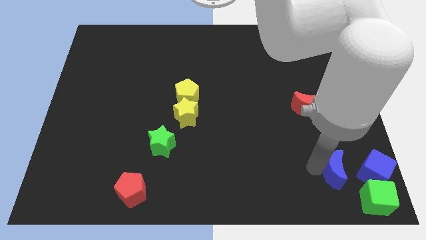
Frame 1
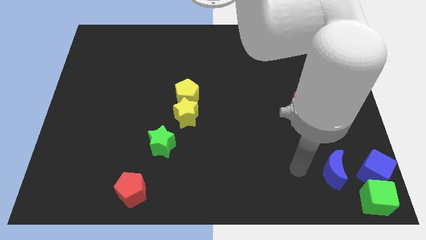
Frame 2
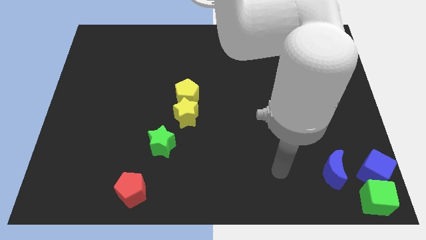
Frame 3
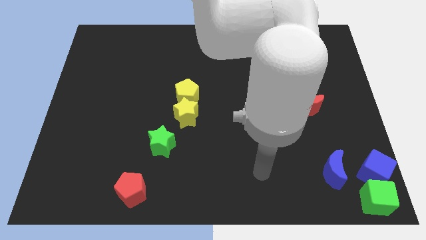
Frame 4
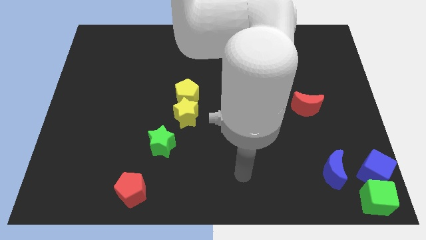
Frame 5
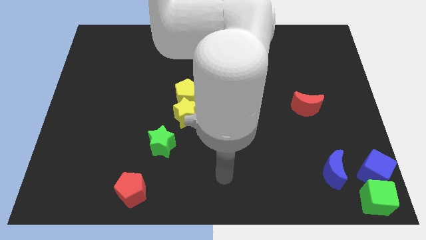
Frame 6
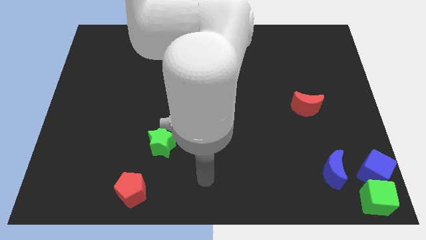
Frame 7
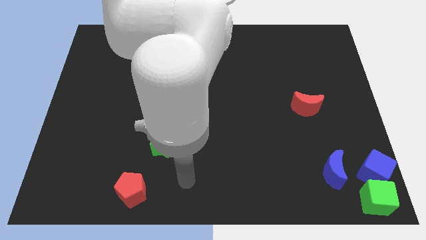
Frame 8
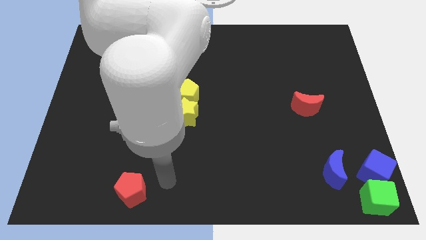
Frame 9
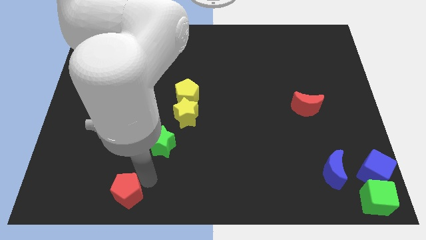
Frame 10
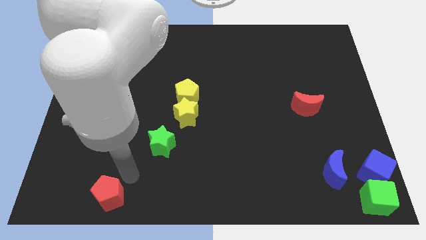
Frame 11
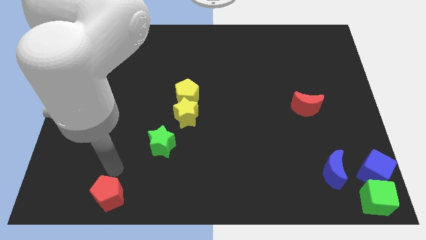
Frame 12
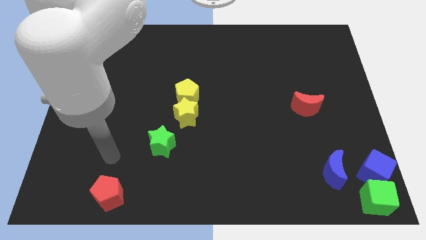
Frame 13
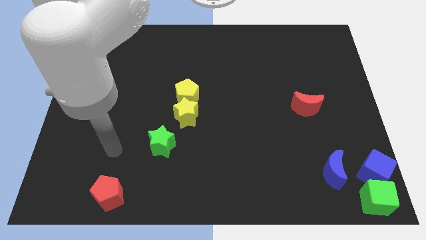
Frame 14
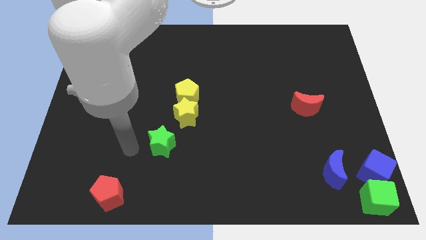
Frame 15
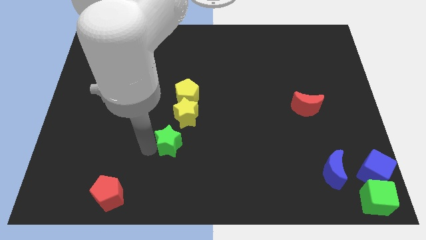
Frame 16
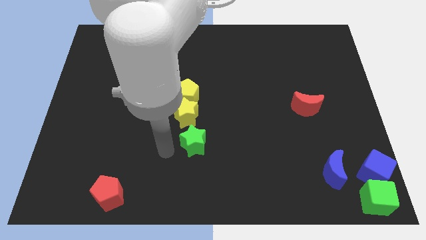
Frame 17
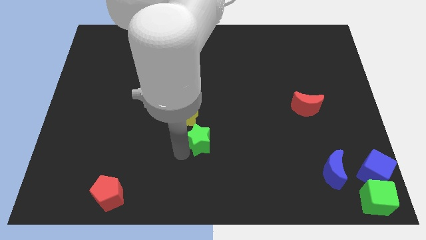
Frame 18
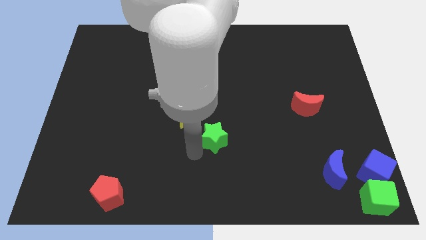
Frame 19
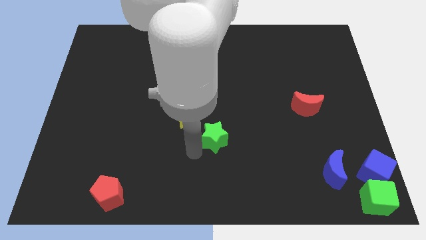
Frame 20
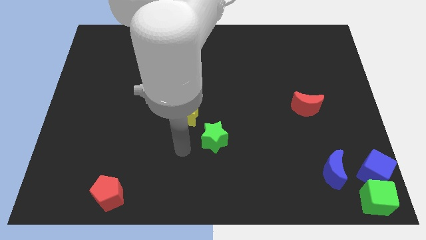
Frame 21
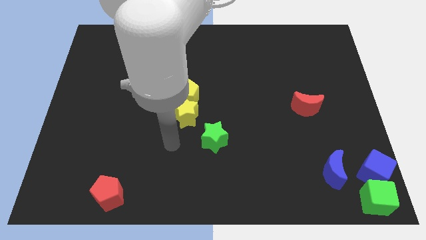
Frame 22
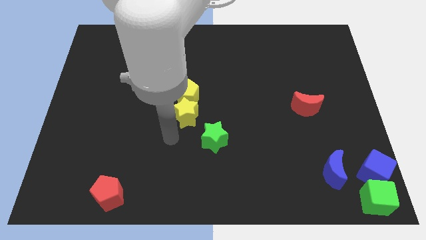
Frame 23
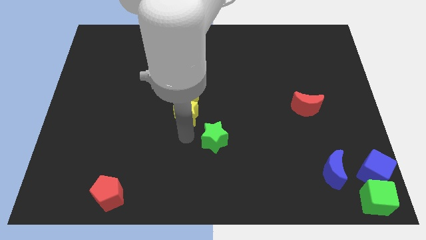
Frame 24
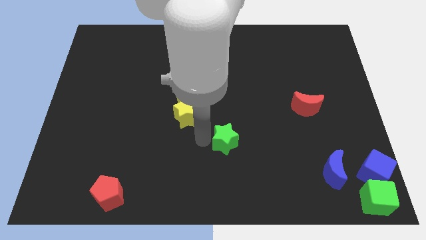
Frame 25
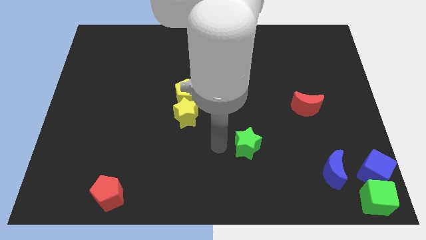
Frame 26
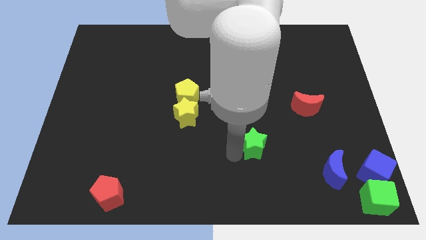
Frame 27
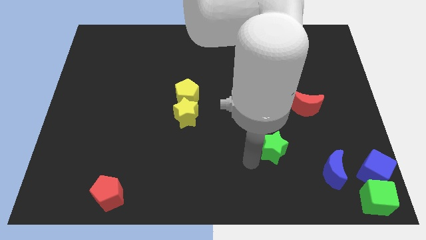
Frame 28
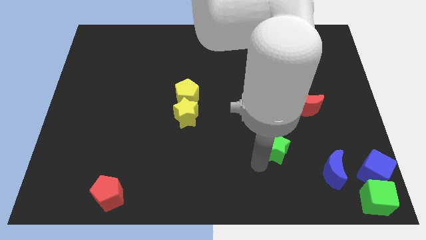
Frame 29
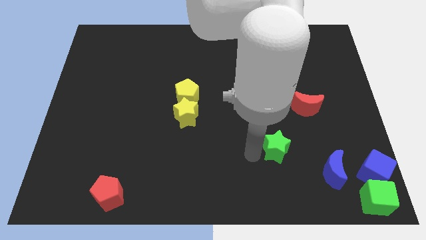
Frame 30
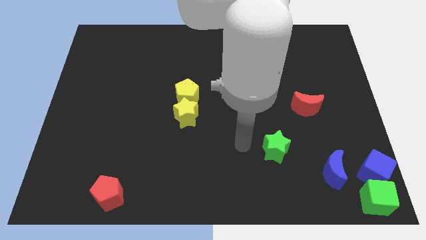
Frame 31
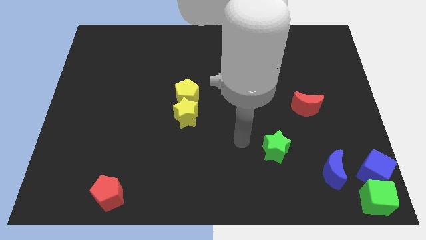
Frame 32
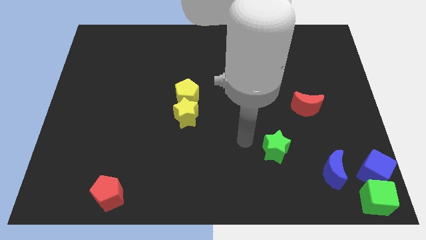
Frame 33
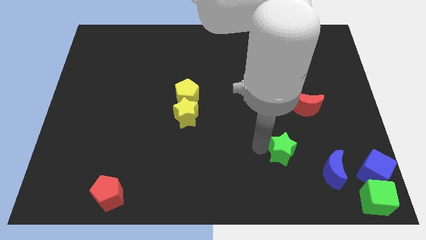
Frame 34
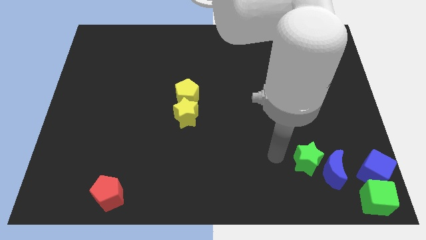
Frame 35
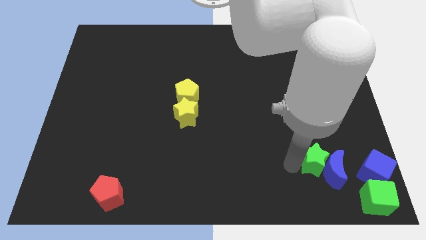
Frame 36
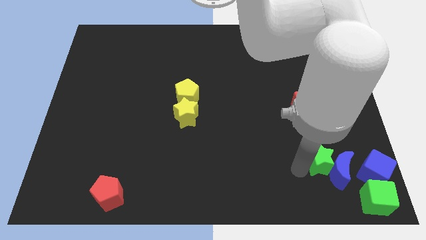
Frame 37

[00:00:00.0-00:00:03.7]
put the green star vertically below the red pentagon

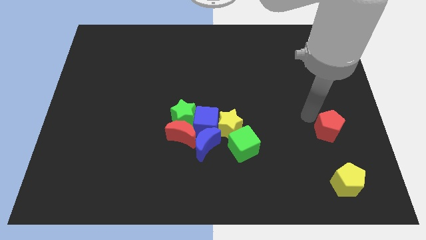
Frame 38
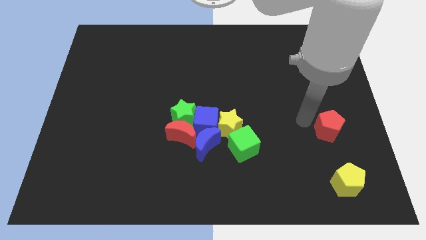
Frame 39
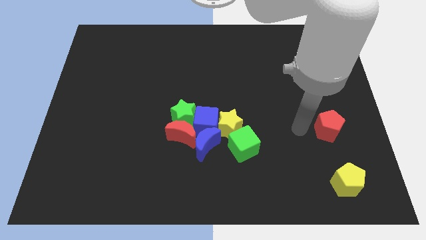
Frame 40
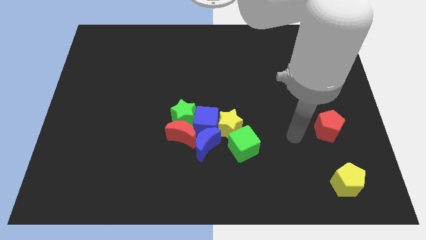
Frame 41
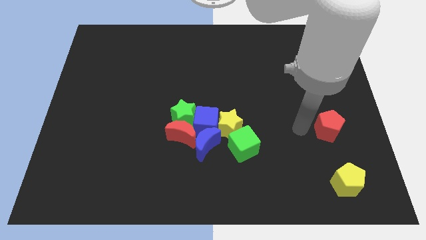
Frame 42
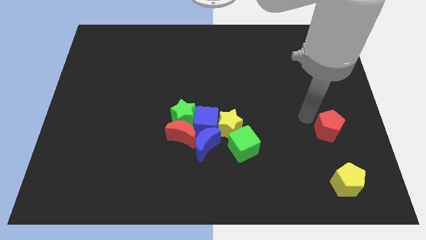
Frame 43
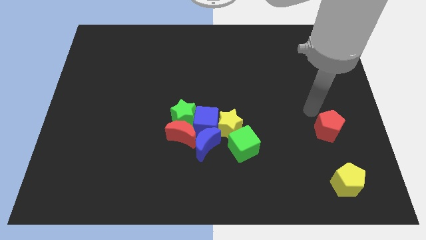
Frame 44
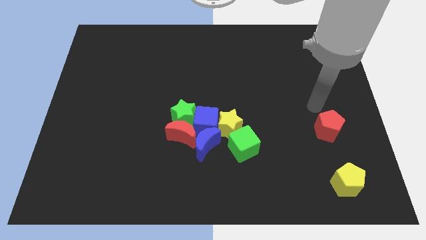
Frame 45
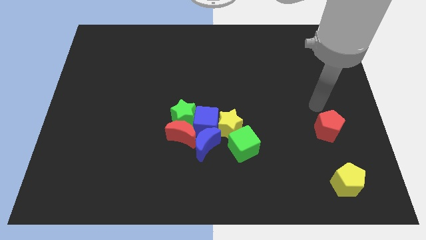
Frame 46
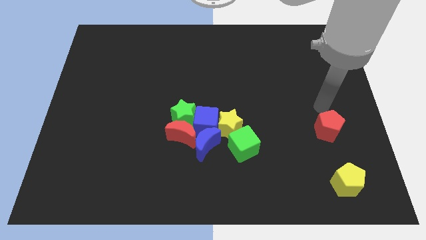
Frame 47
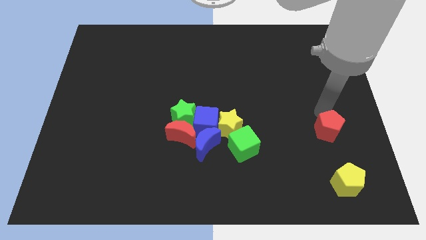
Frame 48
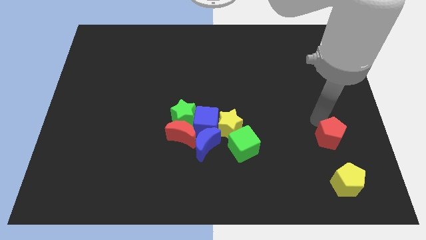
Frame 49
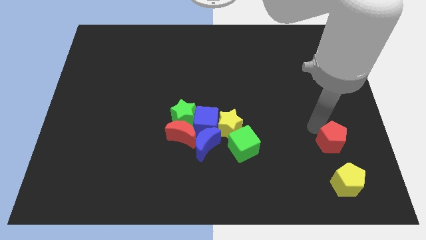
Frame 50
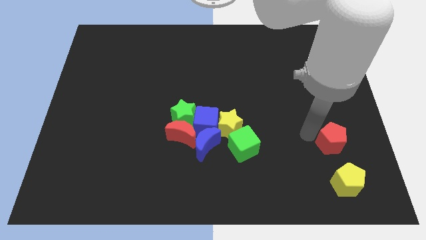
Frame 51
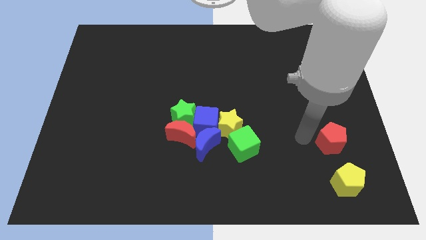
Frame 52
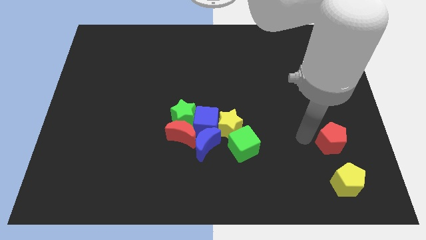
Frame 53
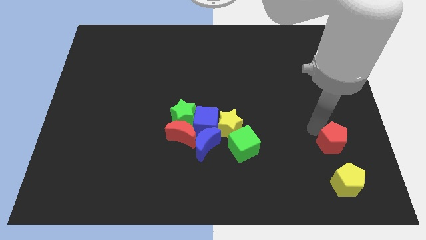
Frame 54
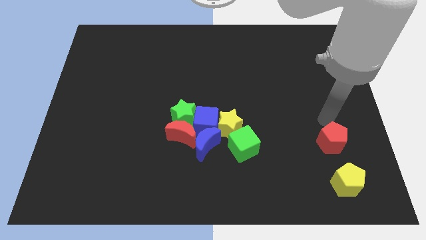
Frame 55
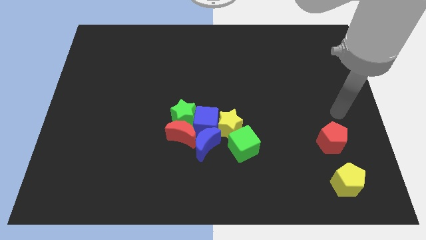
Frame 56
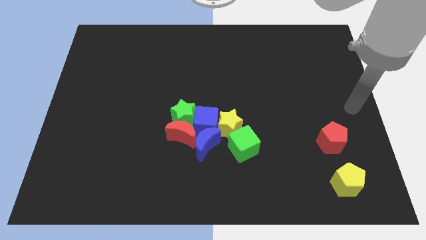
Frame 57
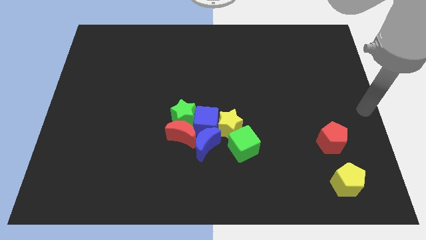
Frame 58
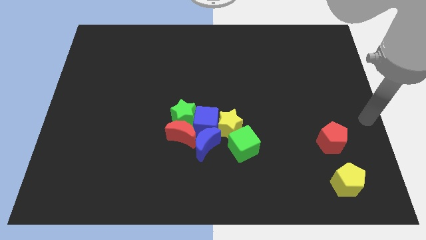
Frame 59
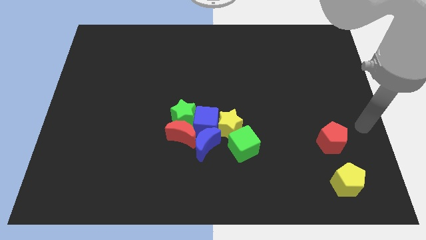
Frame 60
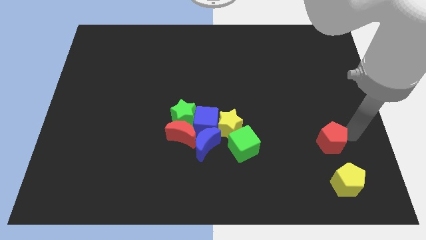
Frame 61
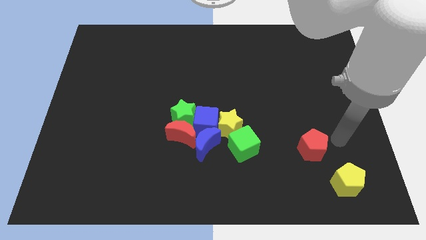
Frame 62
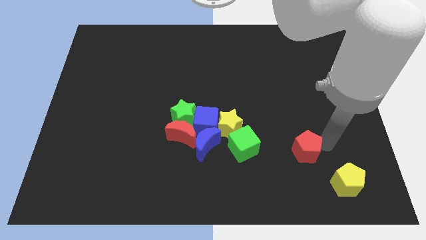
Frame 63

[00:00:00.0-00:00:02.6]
slide the red pentagon diagonal to the yellow pentagon

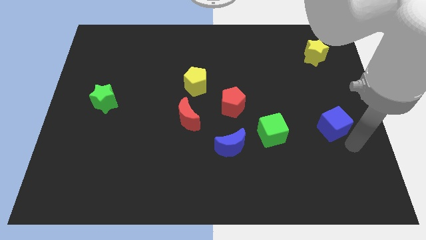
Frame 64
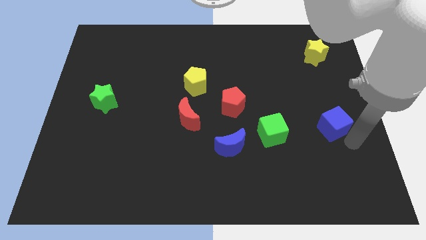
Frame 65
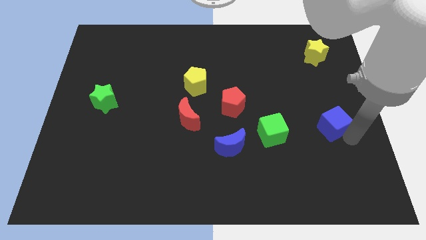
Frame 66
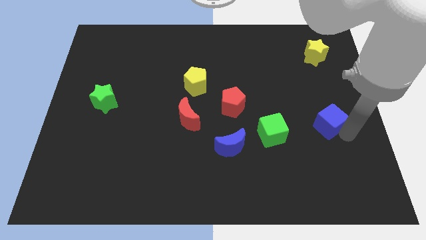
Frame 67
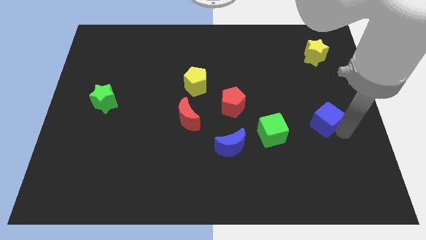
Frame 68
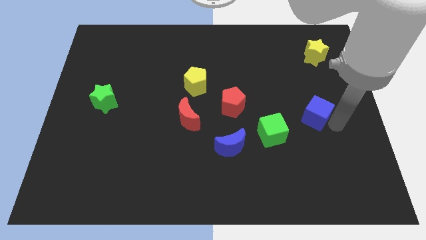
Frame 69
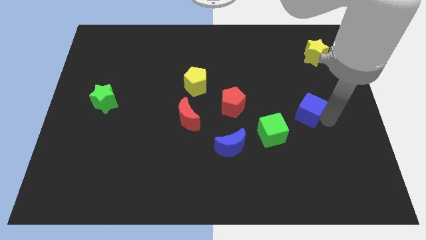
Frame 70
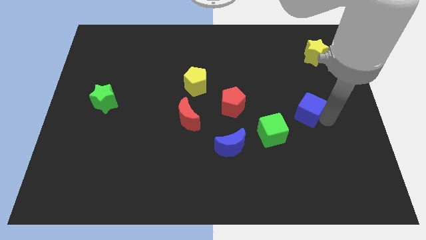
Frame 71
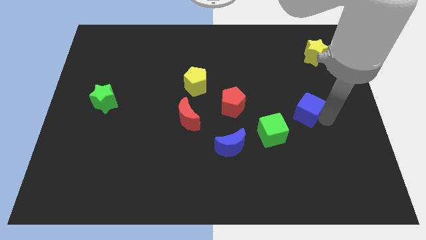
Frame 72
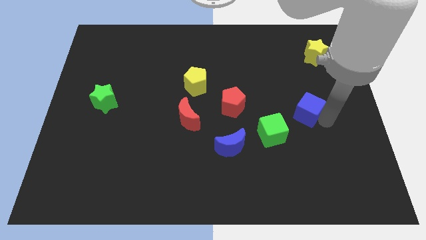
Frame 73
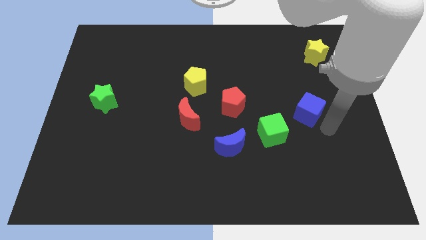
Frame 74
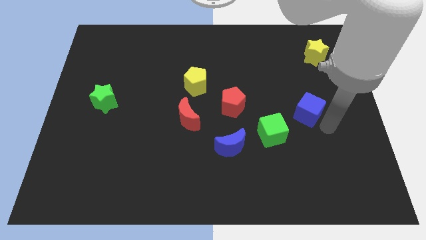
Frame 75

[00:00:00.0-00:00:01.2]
place blue cube to the top right of the green cube

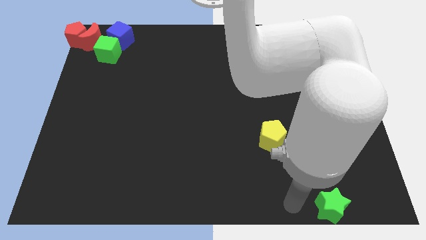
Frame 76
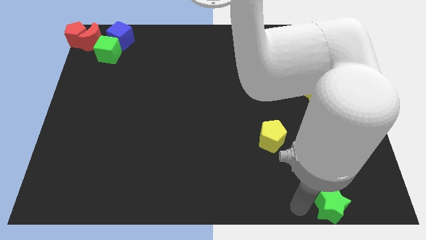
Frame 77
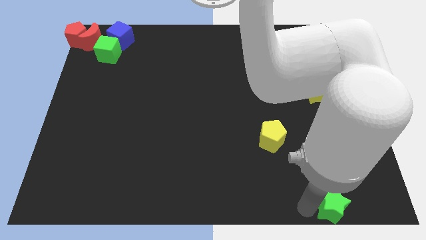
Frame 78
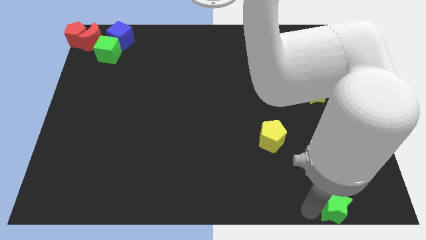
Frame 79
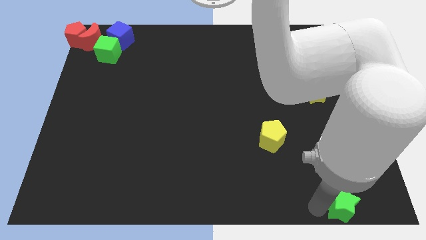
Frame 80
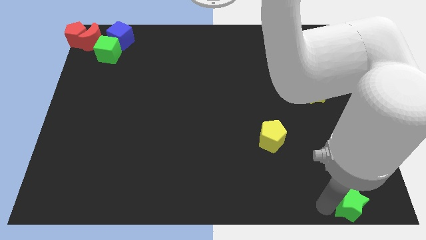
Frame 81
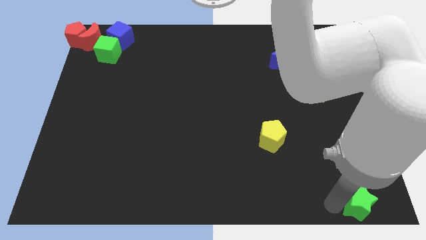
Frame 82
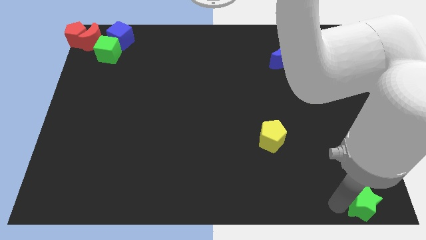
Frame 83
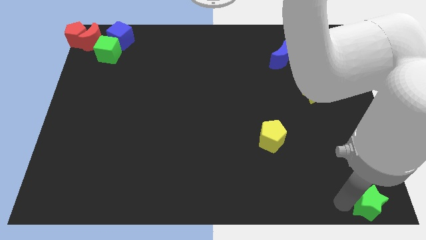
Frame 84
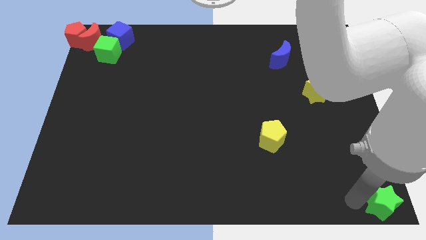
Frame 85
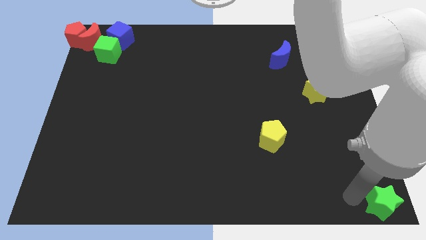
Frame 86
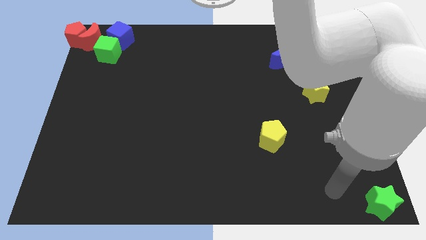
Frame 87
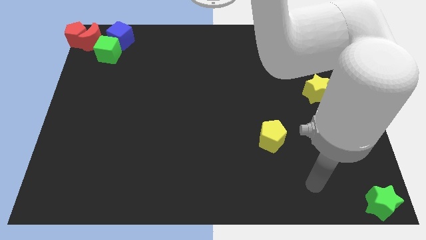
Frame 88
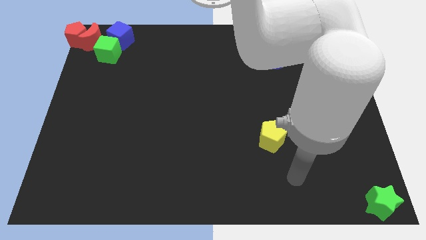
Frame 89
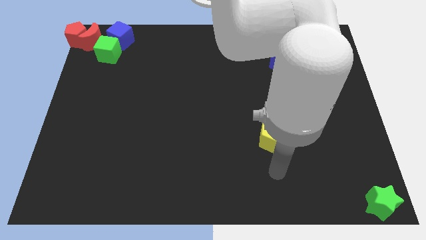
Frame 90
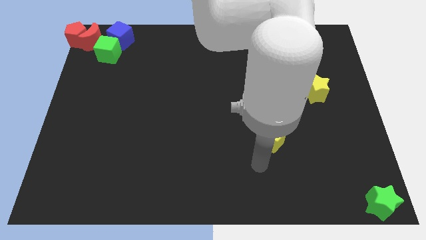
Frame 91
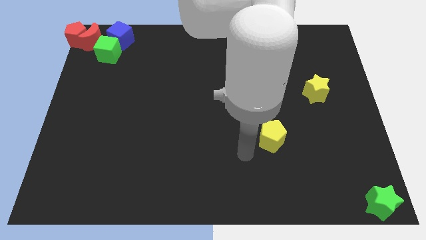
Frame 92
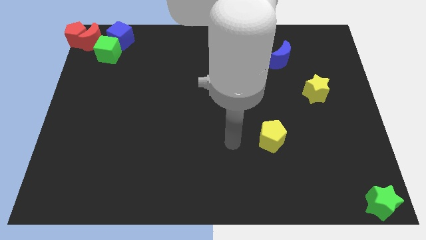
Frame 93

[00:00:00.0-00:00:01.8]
place the green star at the bottom right corner
